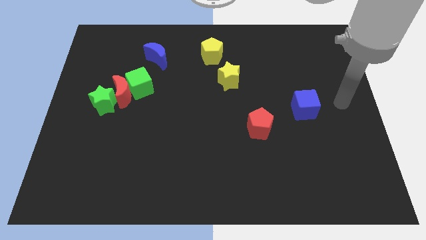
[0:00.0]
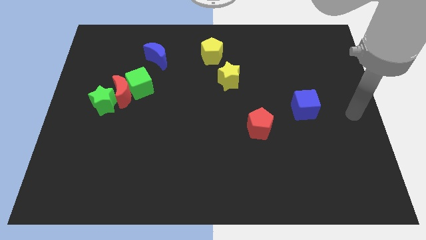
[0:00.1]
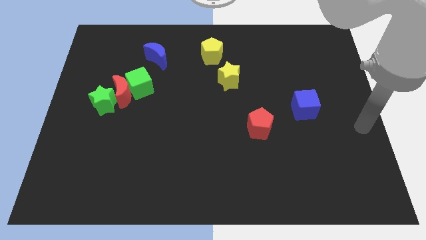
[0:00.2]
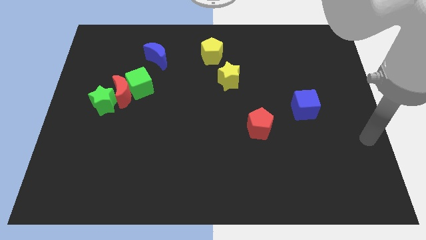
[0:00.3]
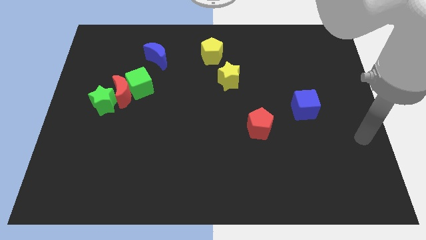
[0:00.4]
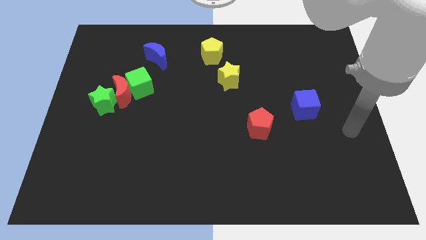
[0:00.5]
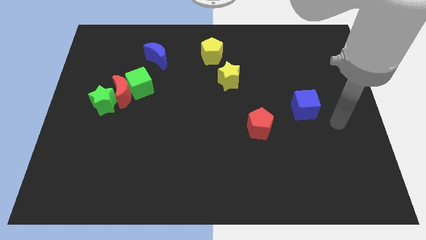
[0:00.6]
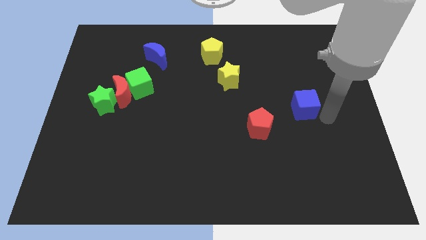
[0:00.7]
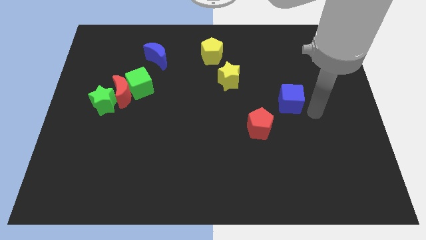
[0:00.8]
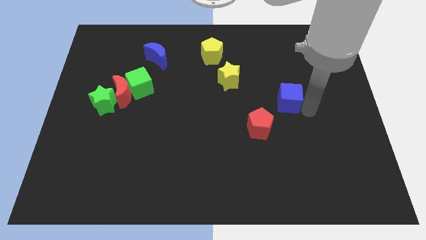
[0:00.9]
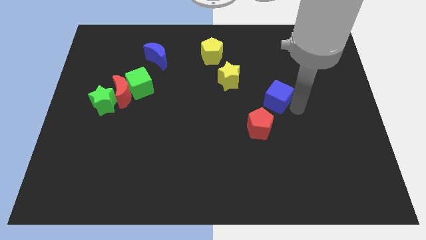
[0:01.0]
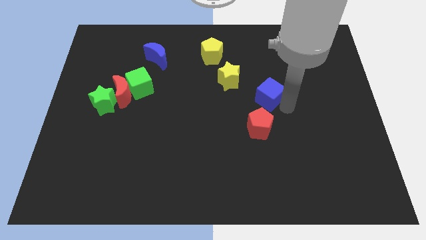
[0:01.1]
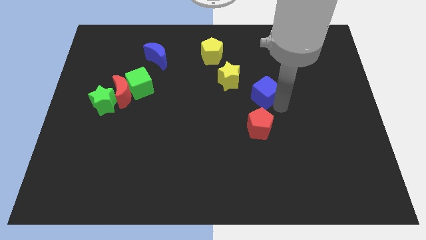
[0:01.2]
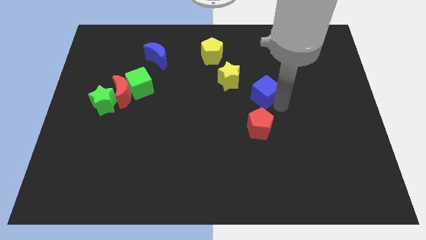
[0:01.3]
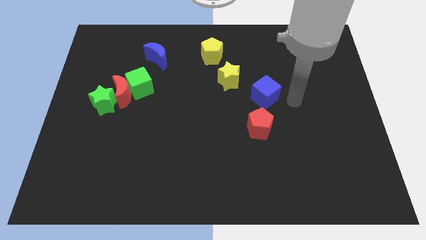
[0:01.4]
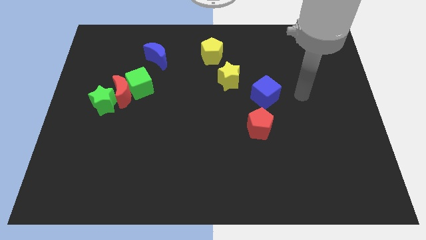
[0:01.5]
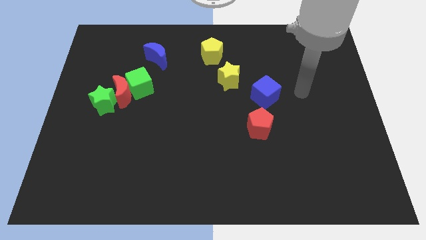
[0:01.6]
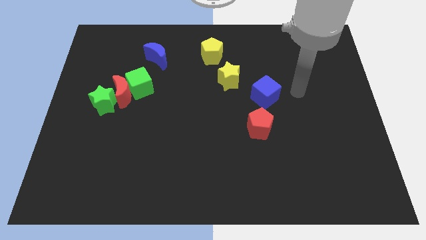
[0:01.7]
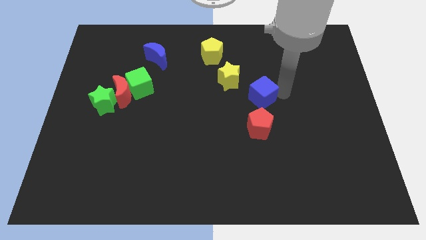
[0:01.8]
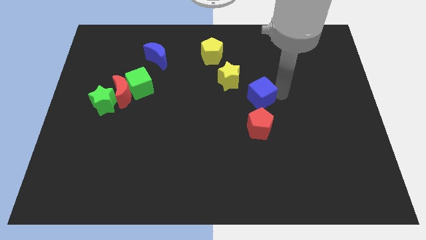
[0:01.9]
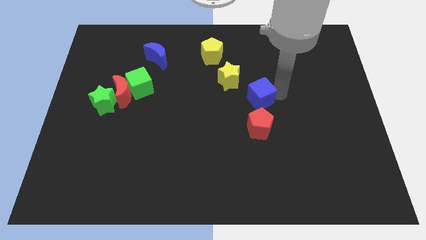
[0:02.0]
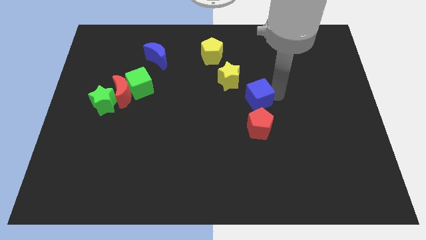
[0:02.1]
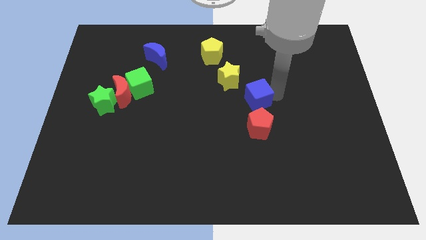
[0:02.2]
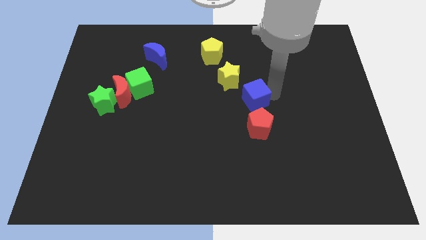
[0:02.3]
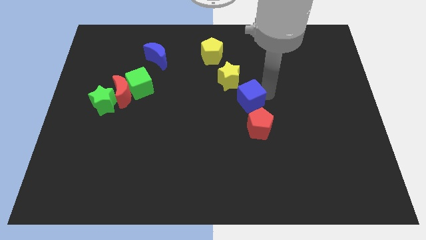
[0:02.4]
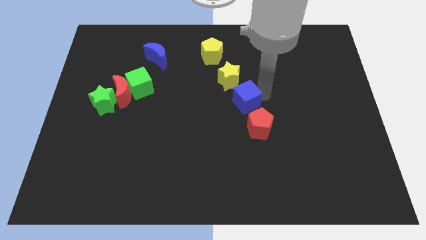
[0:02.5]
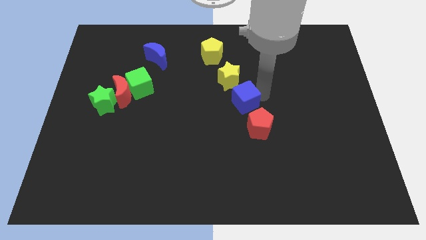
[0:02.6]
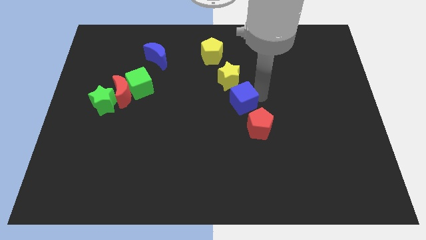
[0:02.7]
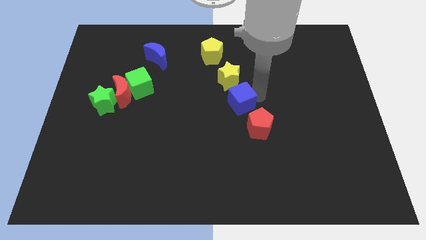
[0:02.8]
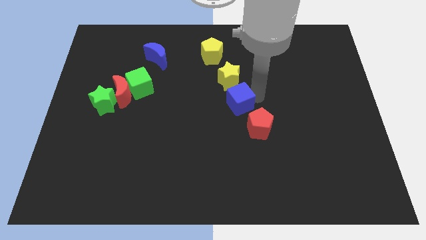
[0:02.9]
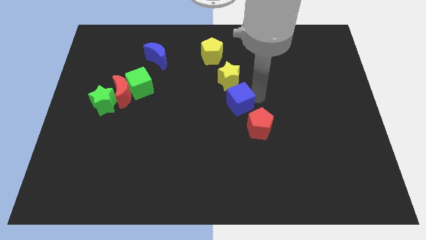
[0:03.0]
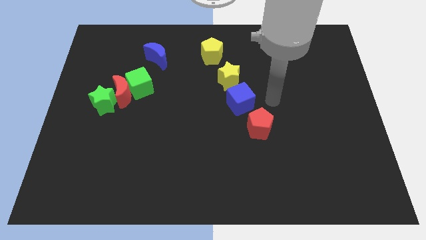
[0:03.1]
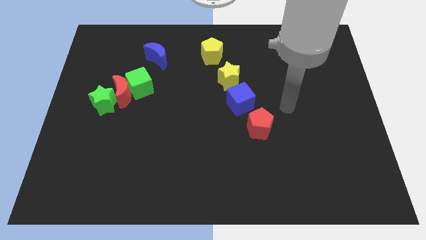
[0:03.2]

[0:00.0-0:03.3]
place the blue cube below the yellow star

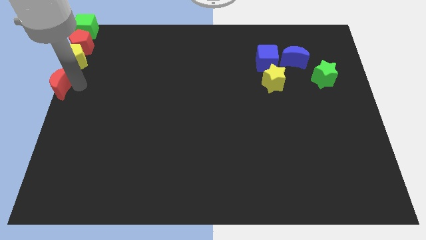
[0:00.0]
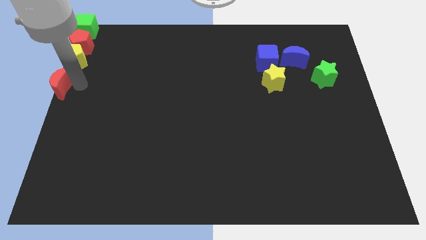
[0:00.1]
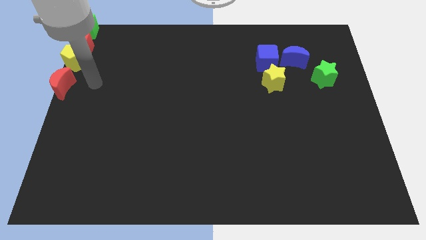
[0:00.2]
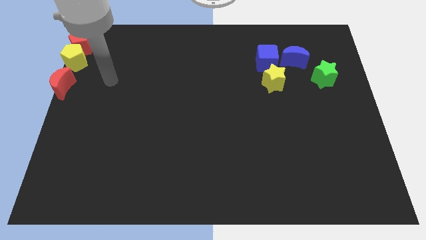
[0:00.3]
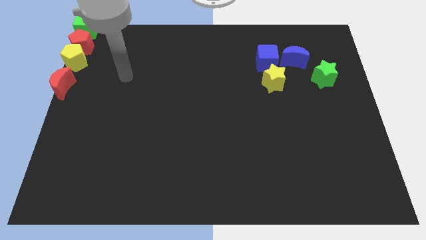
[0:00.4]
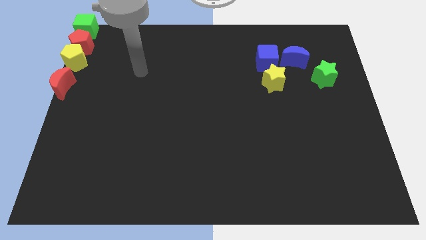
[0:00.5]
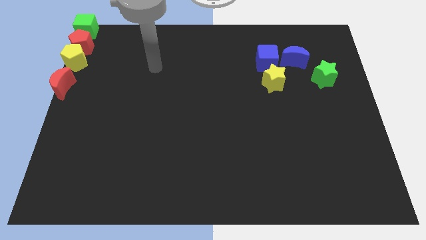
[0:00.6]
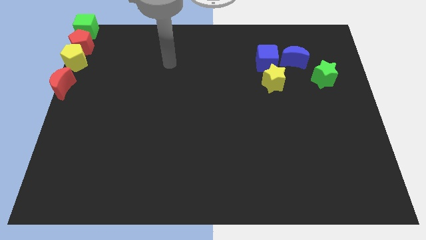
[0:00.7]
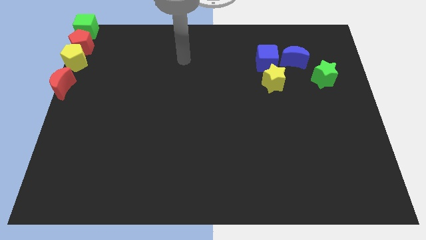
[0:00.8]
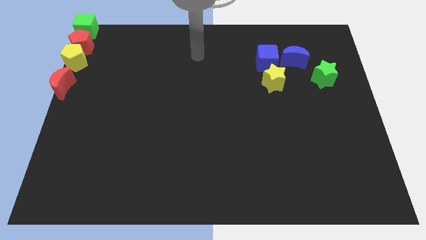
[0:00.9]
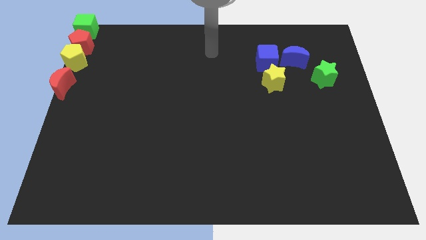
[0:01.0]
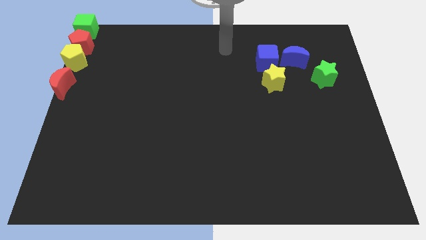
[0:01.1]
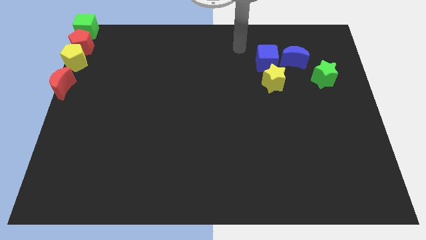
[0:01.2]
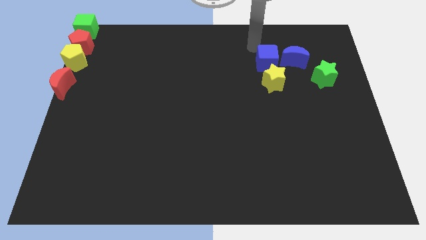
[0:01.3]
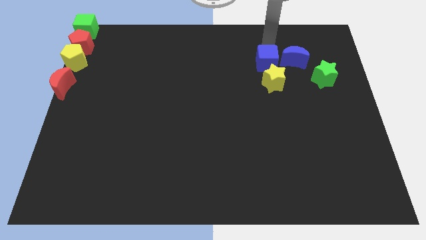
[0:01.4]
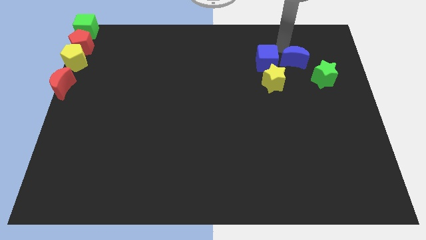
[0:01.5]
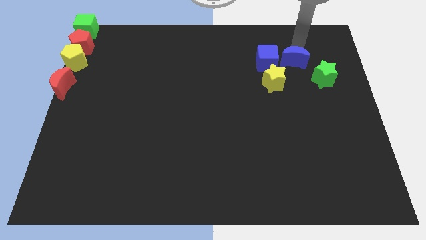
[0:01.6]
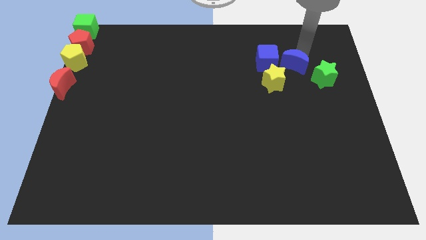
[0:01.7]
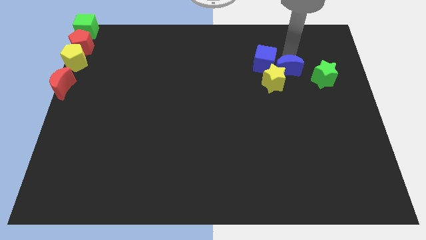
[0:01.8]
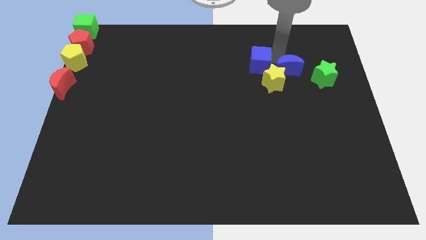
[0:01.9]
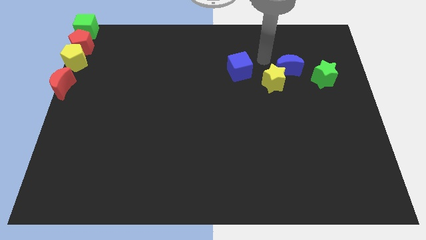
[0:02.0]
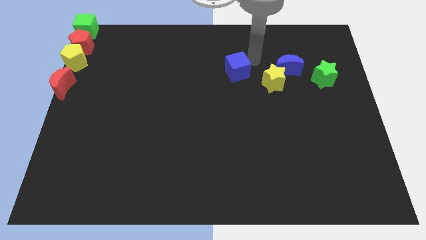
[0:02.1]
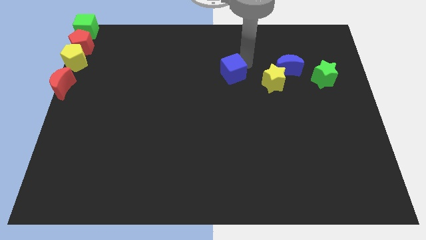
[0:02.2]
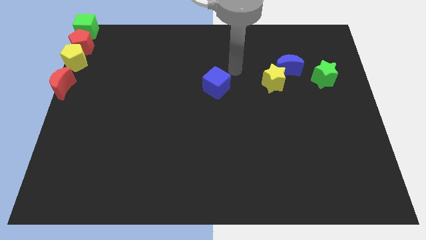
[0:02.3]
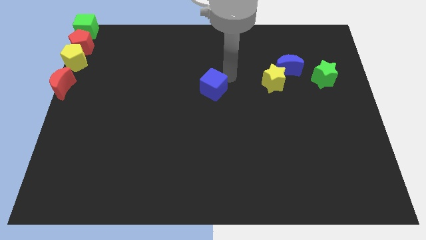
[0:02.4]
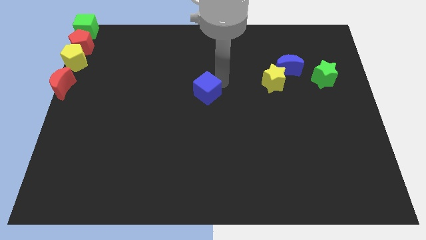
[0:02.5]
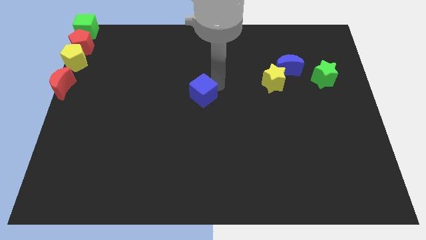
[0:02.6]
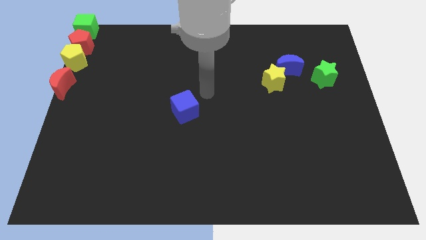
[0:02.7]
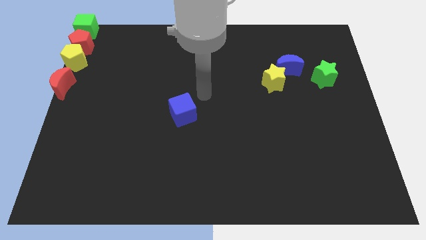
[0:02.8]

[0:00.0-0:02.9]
move the blue cube diagonal to the bottom left of the yellow star

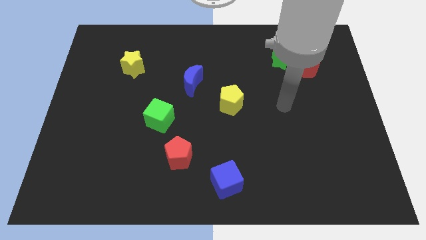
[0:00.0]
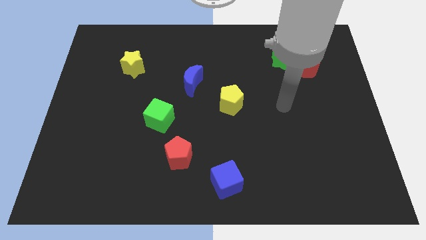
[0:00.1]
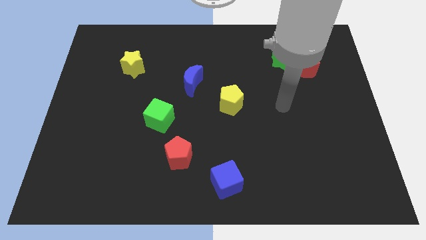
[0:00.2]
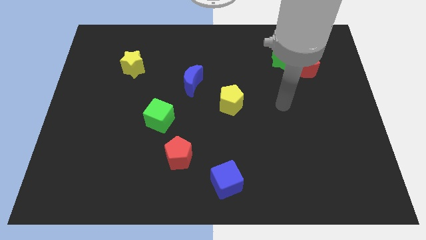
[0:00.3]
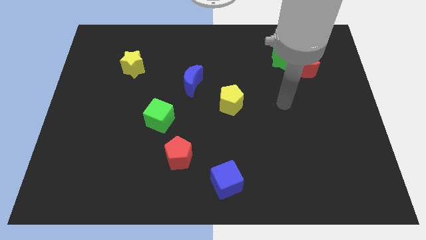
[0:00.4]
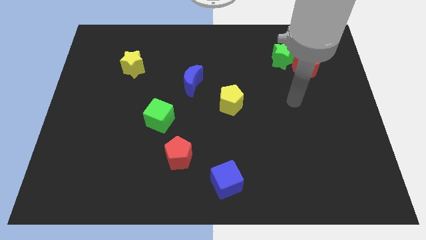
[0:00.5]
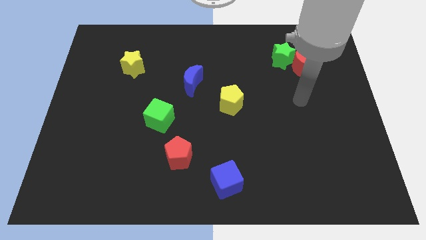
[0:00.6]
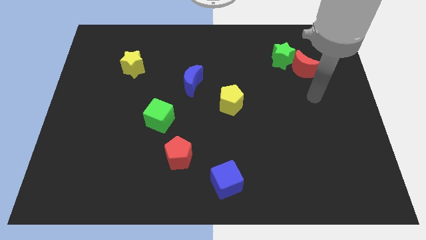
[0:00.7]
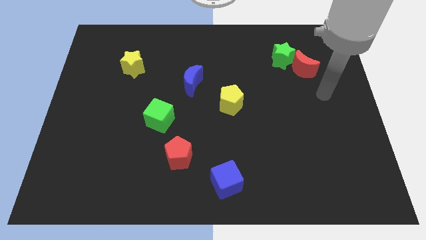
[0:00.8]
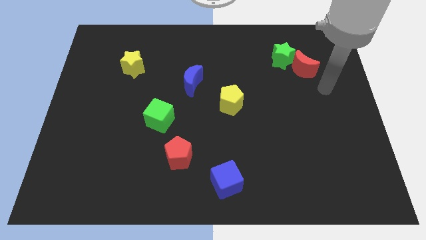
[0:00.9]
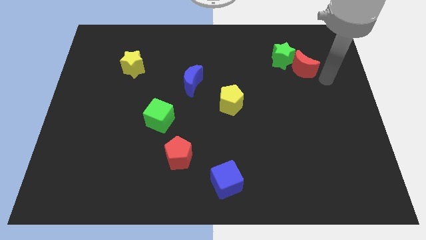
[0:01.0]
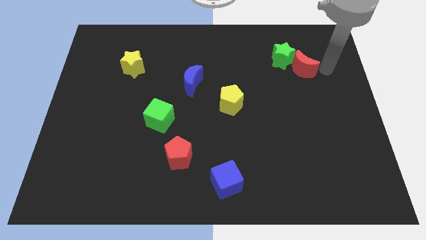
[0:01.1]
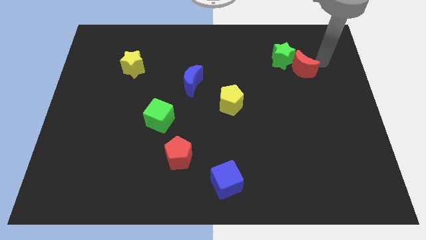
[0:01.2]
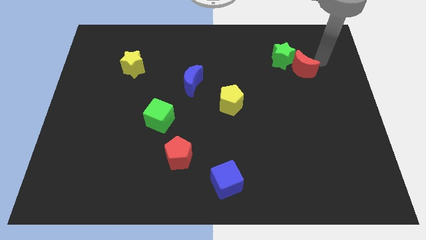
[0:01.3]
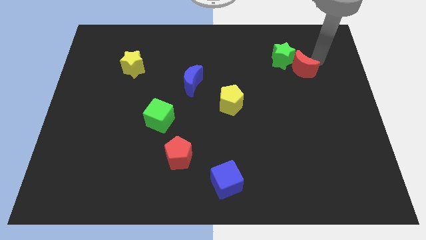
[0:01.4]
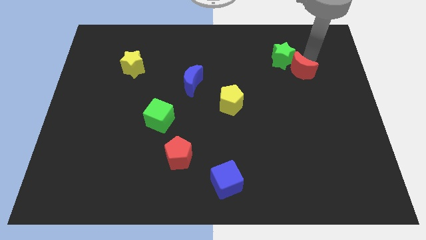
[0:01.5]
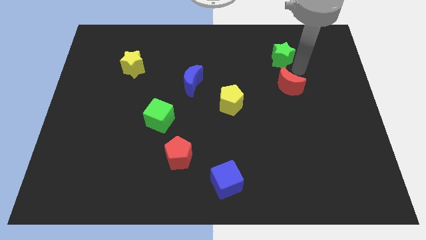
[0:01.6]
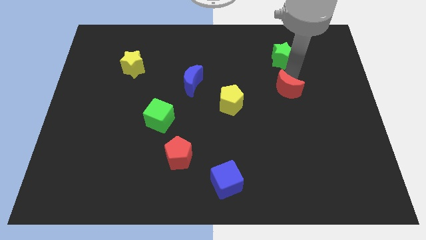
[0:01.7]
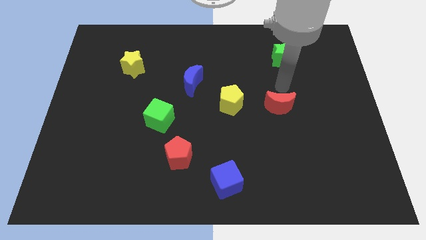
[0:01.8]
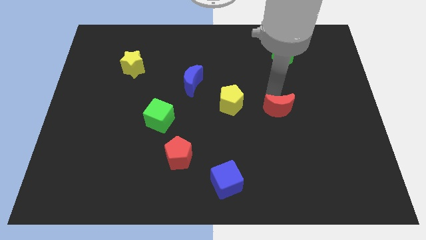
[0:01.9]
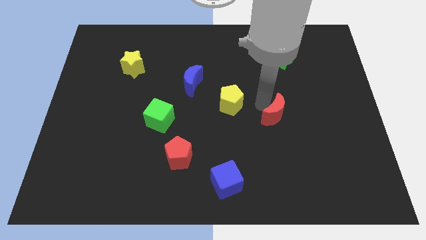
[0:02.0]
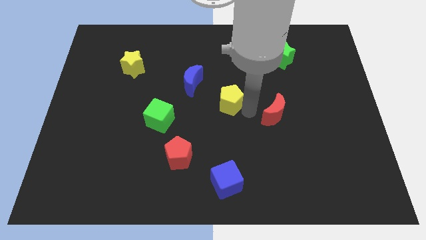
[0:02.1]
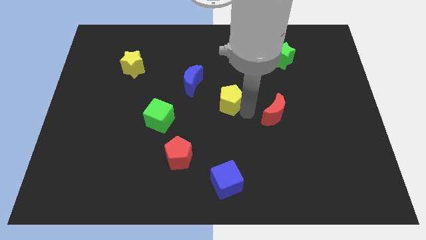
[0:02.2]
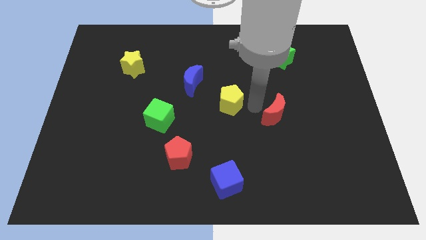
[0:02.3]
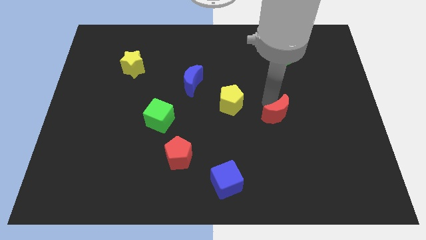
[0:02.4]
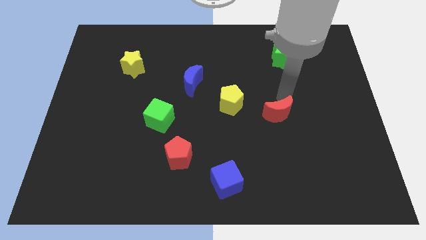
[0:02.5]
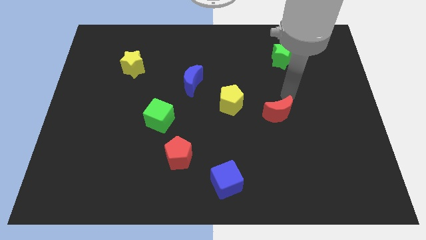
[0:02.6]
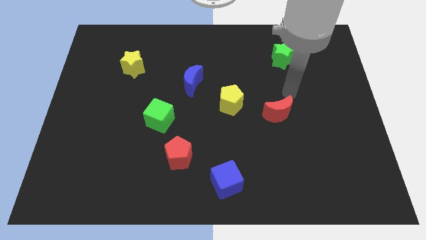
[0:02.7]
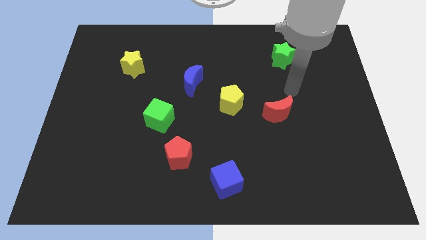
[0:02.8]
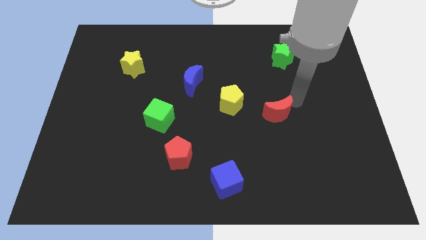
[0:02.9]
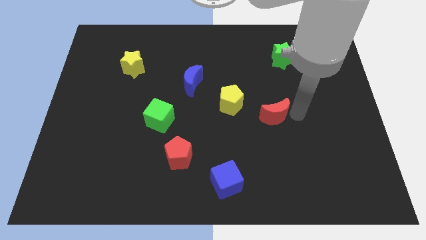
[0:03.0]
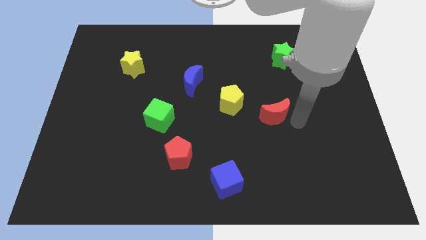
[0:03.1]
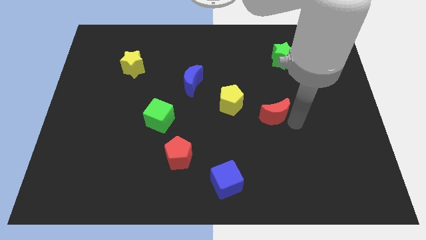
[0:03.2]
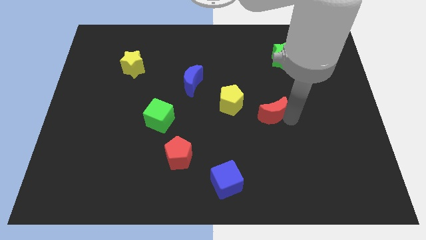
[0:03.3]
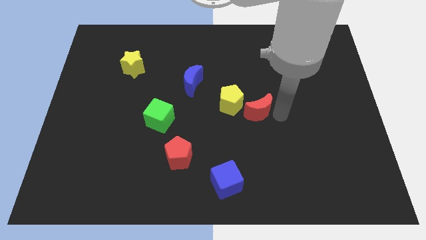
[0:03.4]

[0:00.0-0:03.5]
place the red moon in between the green star and blue cube
